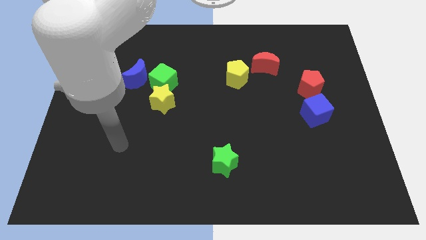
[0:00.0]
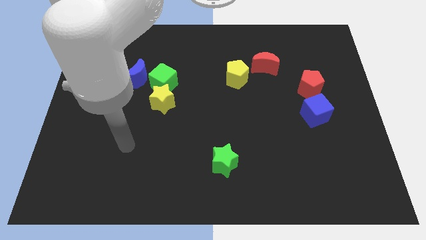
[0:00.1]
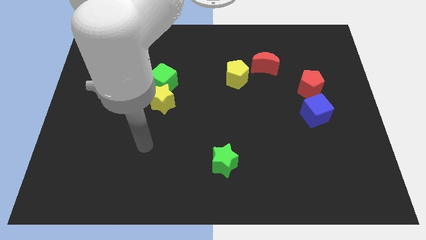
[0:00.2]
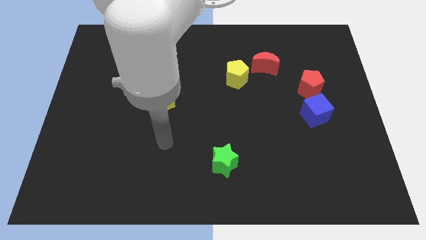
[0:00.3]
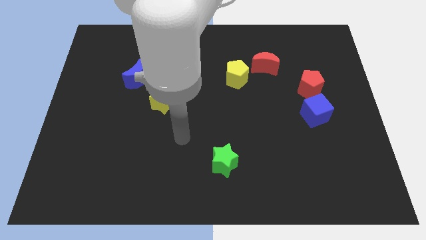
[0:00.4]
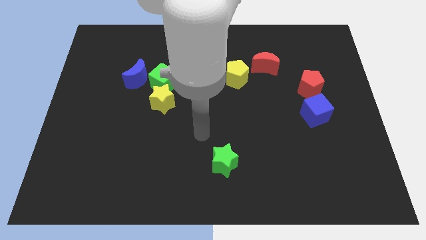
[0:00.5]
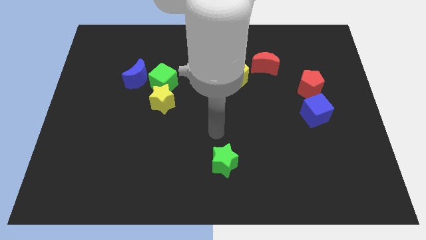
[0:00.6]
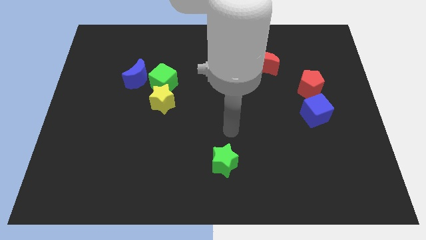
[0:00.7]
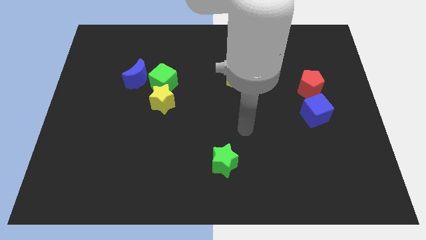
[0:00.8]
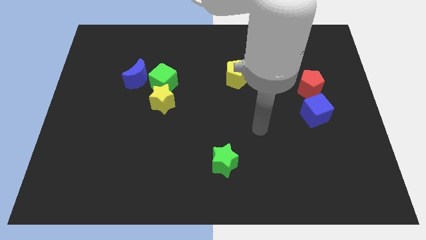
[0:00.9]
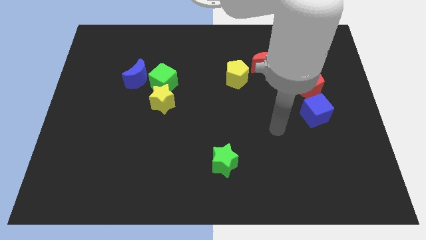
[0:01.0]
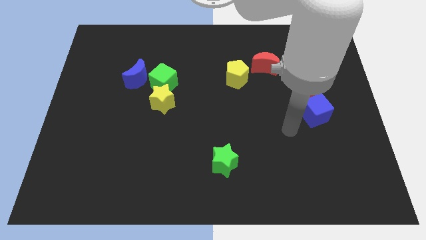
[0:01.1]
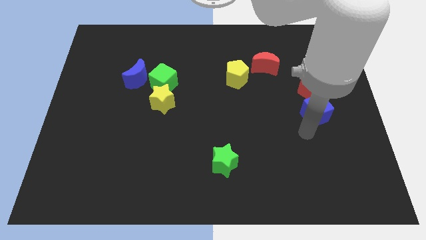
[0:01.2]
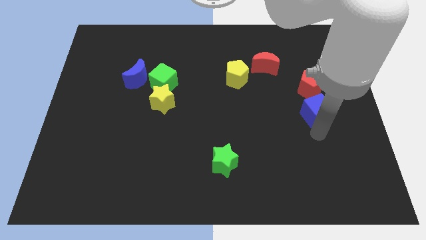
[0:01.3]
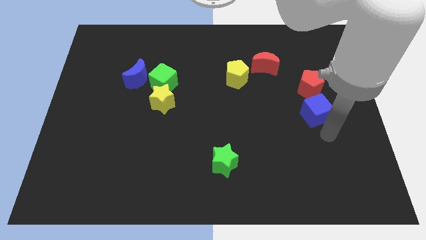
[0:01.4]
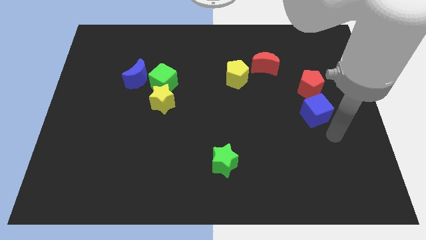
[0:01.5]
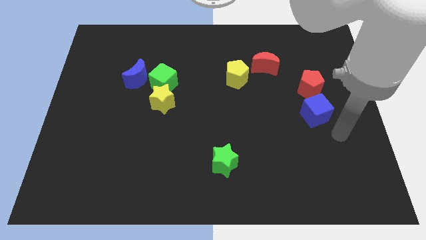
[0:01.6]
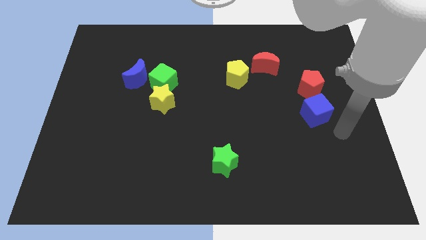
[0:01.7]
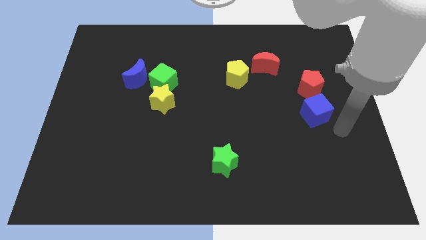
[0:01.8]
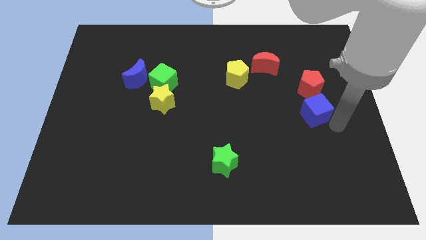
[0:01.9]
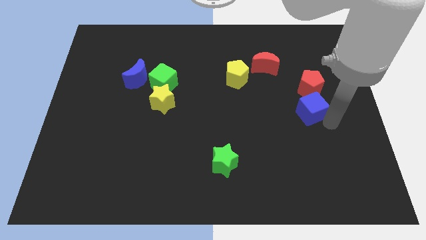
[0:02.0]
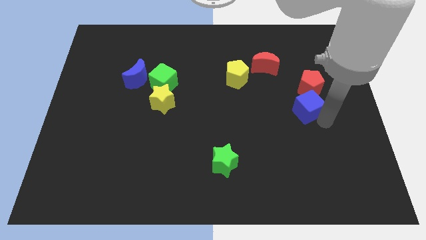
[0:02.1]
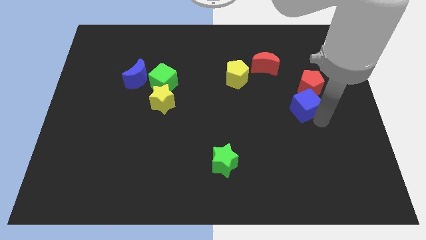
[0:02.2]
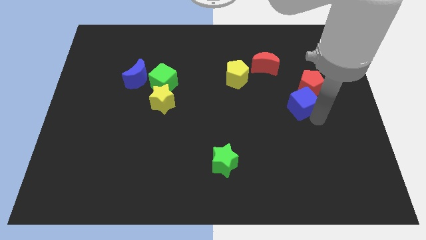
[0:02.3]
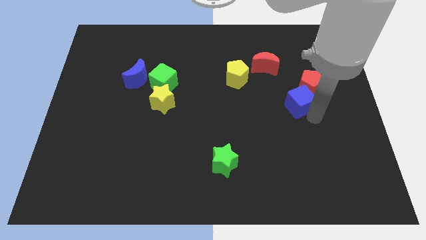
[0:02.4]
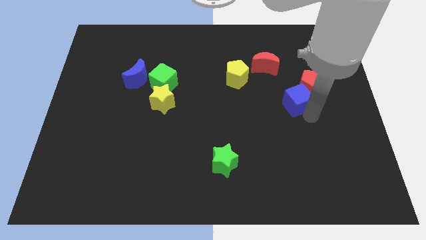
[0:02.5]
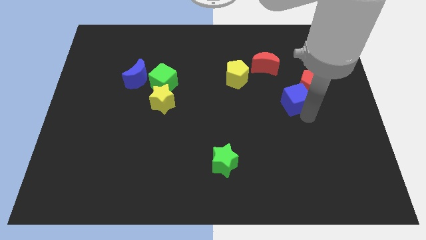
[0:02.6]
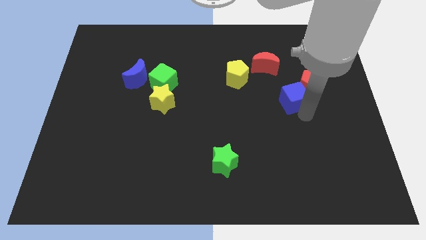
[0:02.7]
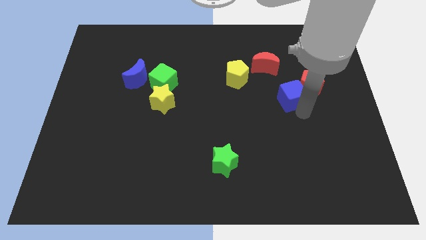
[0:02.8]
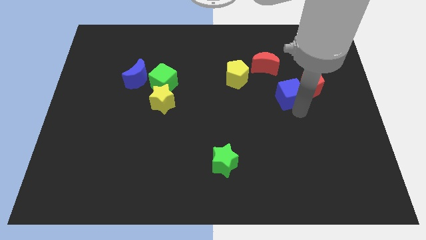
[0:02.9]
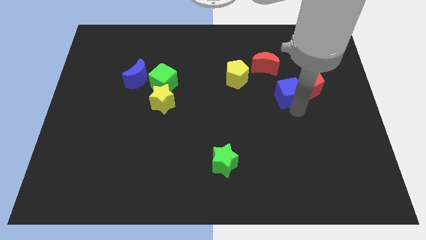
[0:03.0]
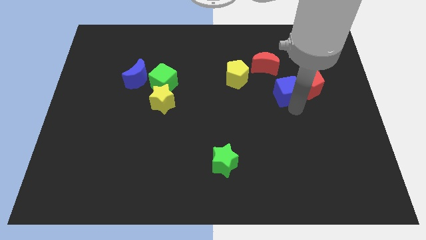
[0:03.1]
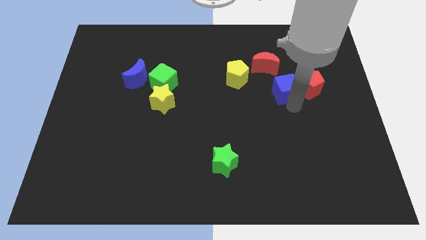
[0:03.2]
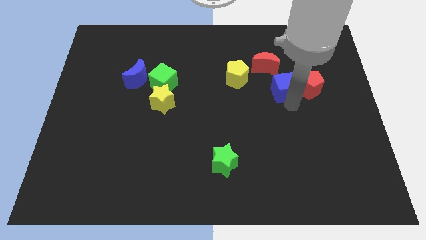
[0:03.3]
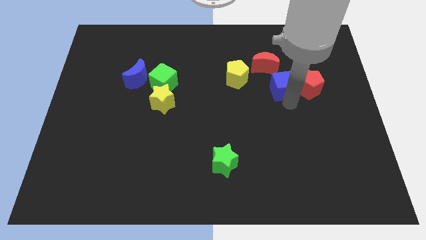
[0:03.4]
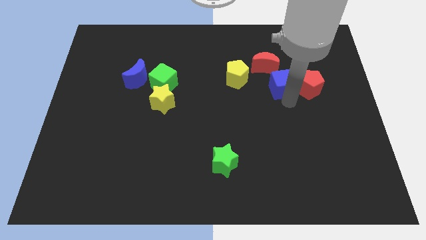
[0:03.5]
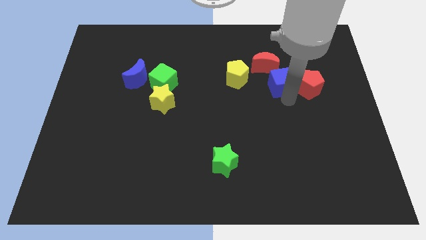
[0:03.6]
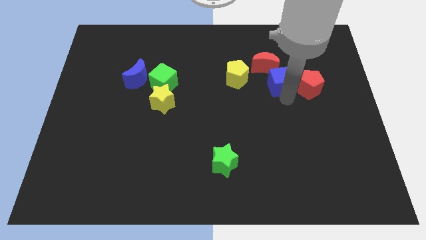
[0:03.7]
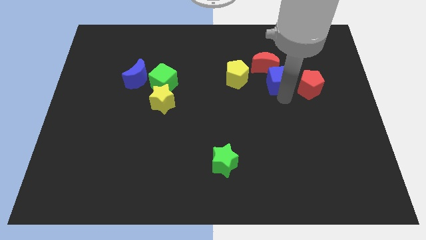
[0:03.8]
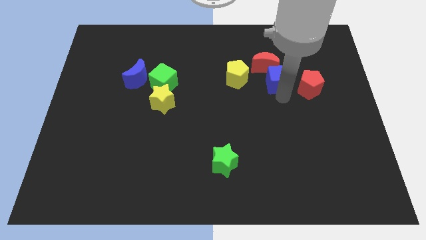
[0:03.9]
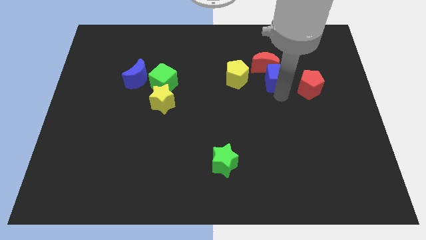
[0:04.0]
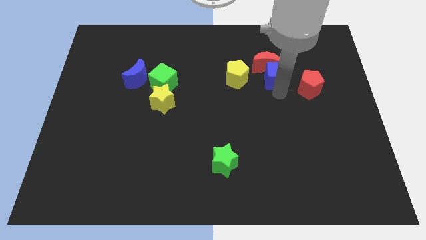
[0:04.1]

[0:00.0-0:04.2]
put the blue cube close to the red moon

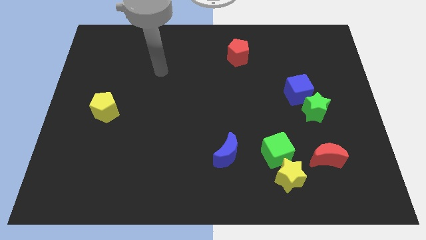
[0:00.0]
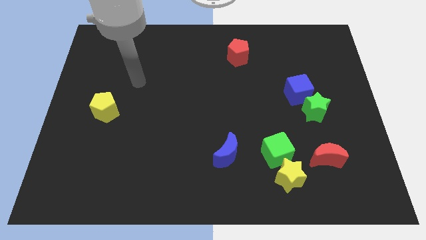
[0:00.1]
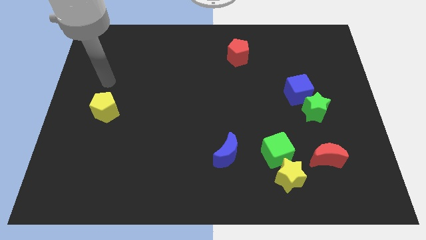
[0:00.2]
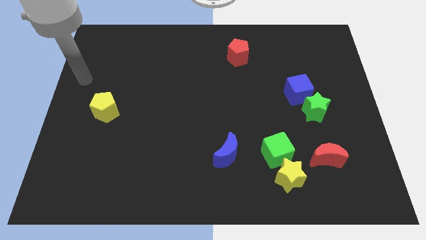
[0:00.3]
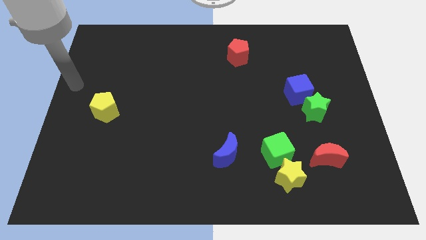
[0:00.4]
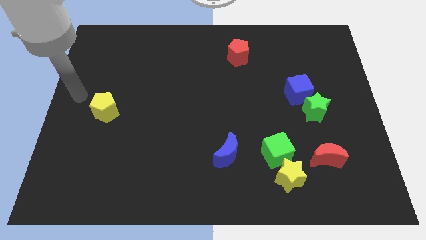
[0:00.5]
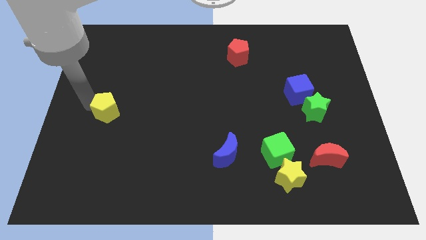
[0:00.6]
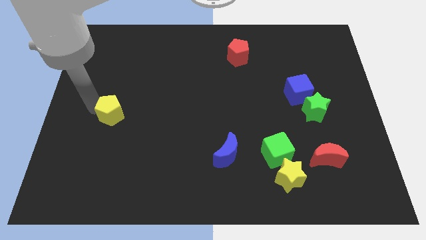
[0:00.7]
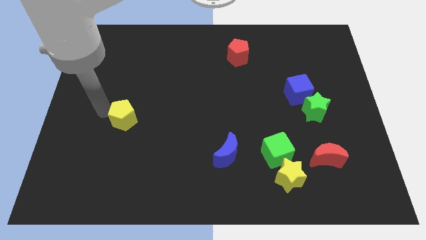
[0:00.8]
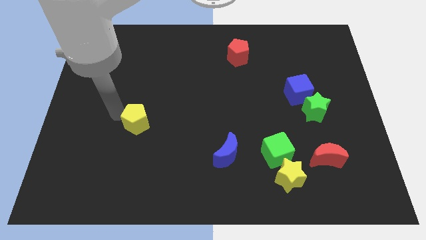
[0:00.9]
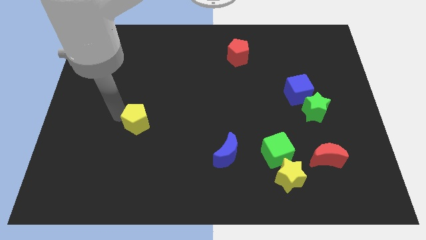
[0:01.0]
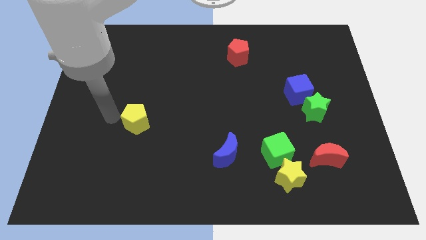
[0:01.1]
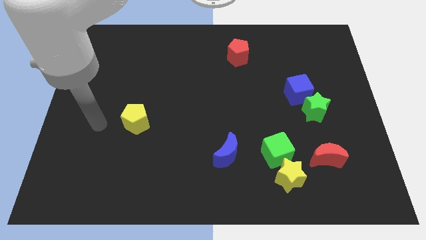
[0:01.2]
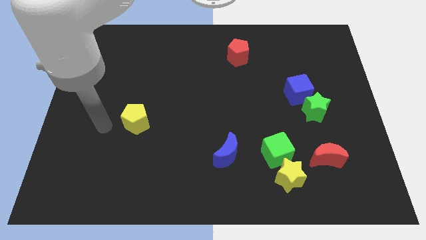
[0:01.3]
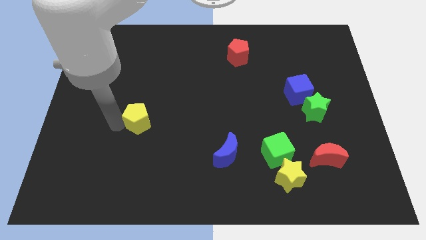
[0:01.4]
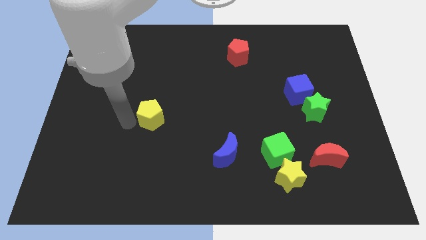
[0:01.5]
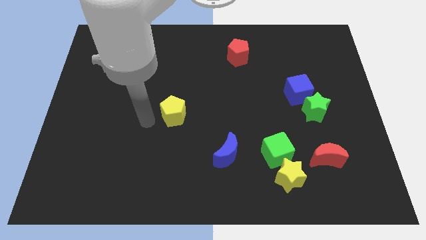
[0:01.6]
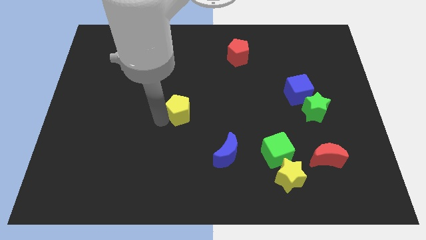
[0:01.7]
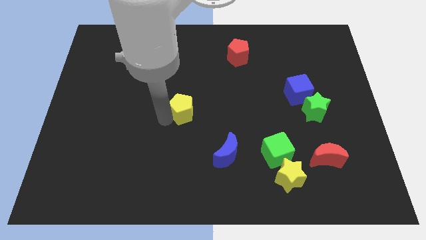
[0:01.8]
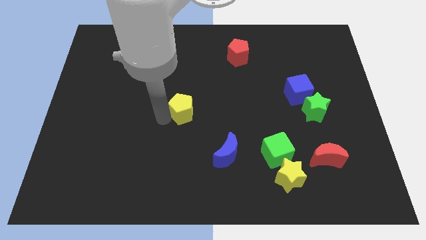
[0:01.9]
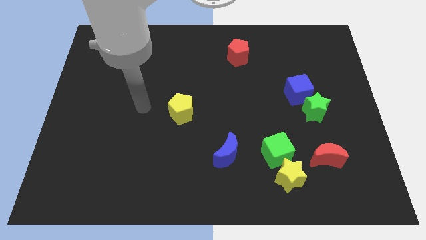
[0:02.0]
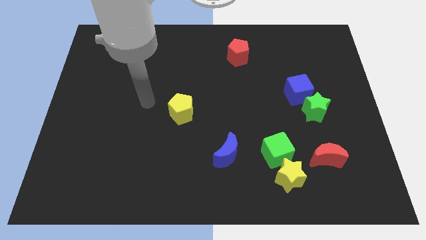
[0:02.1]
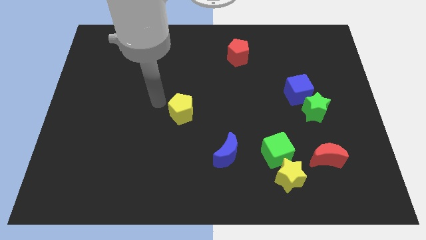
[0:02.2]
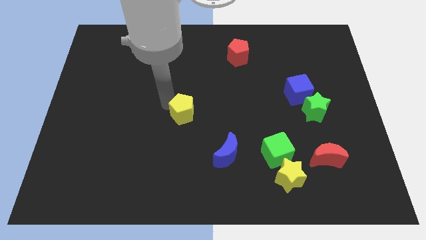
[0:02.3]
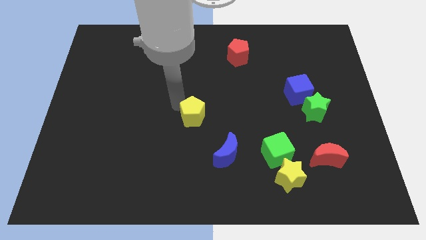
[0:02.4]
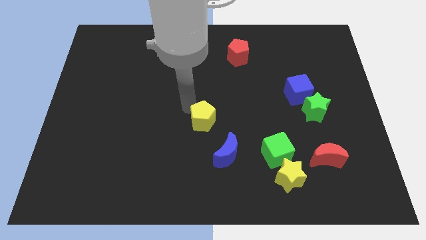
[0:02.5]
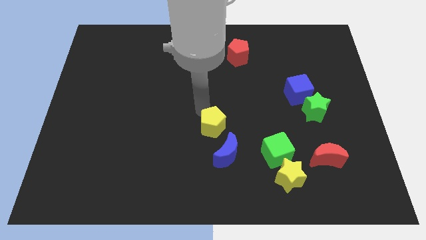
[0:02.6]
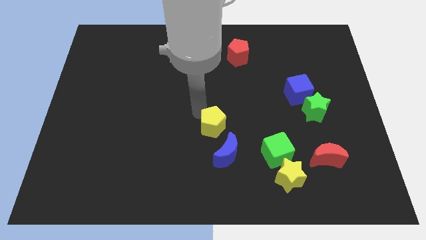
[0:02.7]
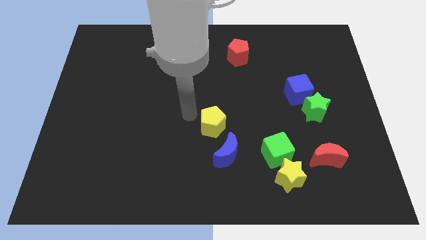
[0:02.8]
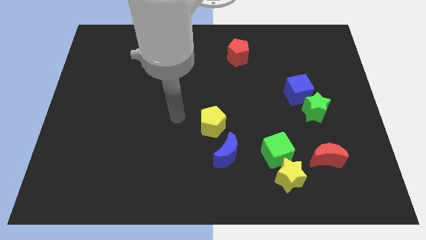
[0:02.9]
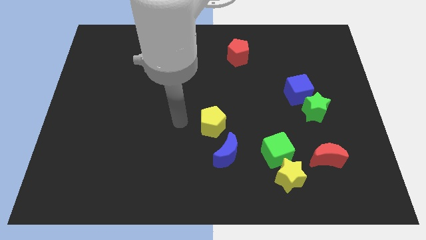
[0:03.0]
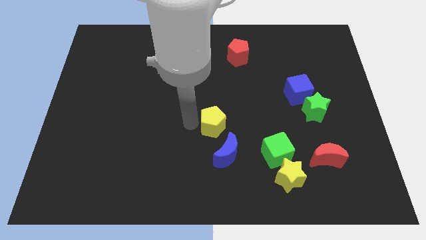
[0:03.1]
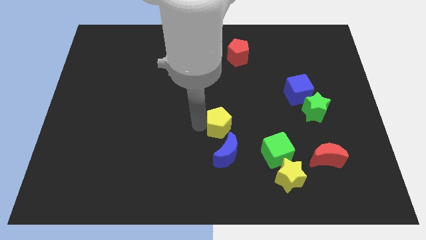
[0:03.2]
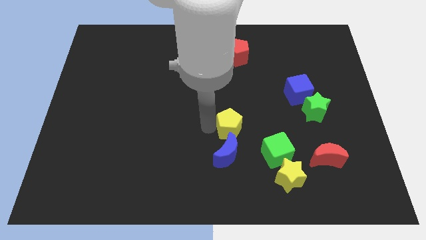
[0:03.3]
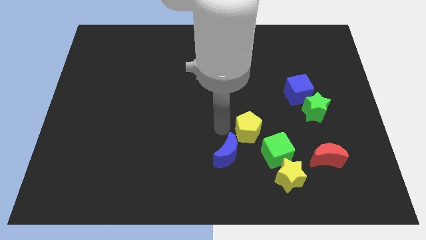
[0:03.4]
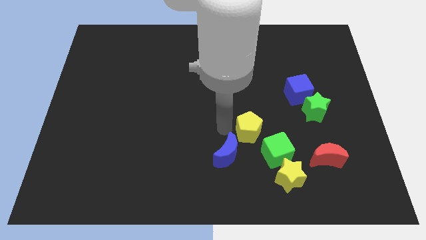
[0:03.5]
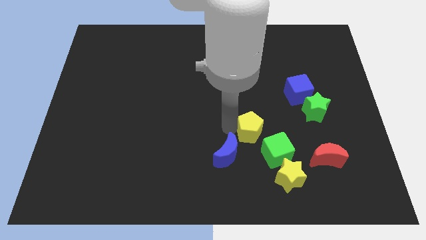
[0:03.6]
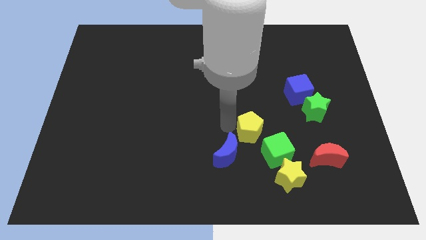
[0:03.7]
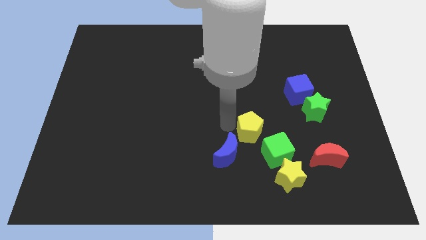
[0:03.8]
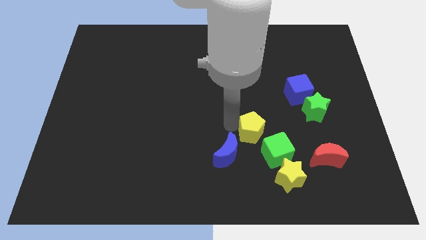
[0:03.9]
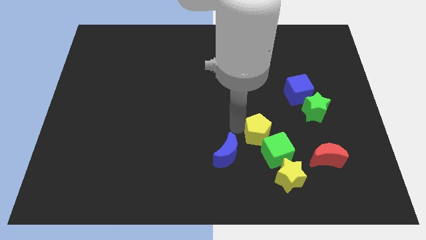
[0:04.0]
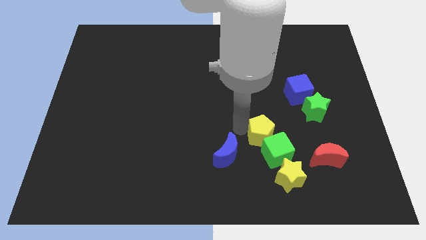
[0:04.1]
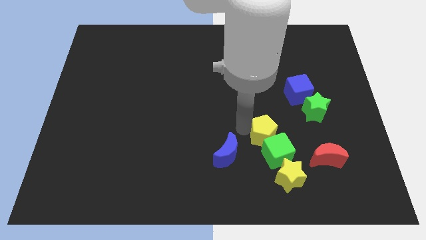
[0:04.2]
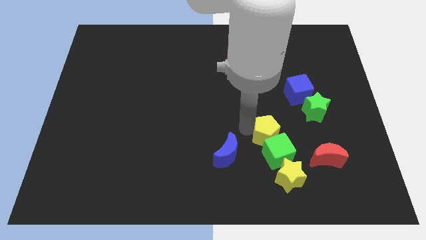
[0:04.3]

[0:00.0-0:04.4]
move the yellow pentagon close to the green cube
